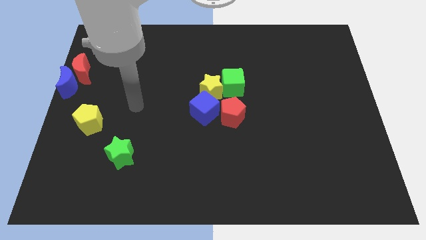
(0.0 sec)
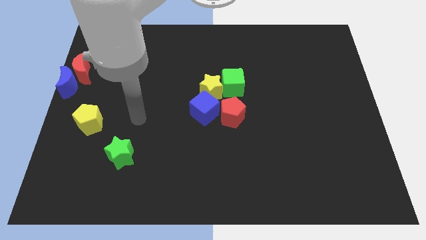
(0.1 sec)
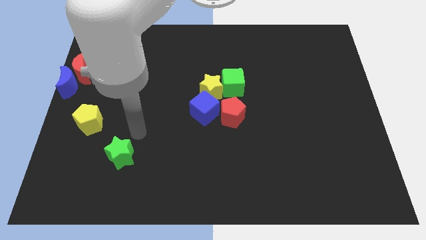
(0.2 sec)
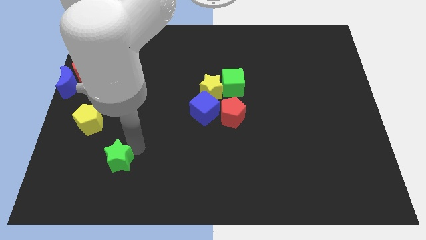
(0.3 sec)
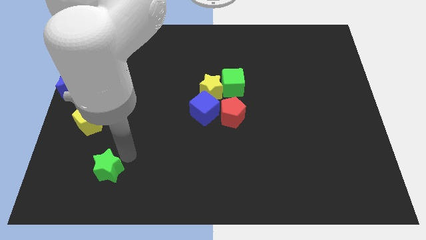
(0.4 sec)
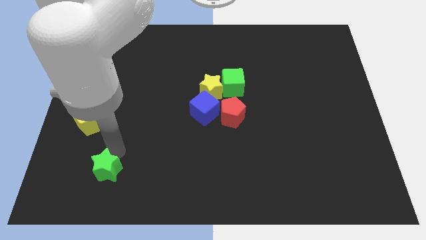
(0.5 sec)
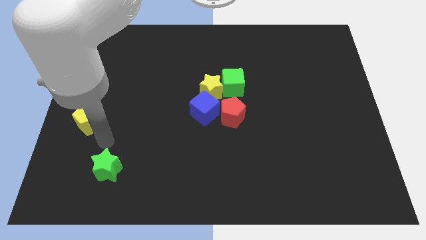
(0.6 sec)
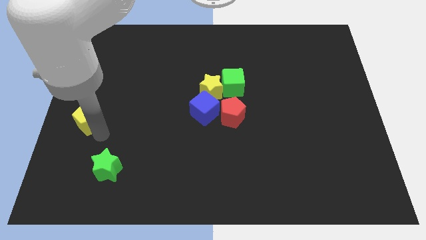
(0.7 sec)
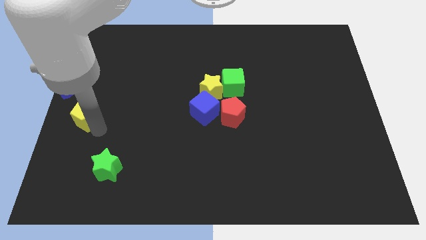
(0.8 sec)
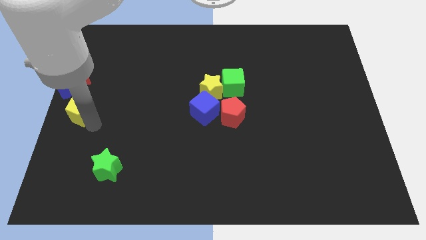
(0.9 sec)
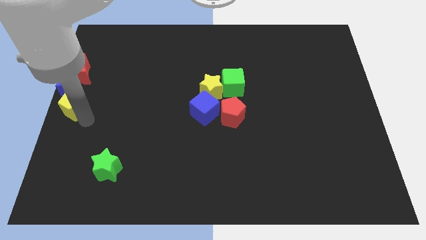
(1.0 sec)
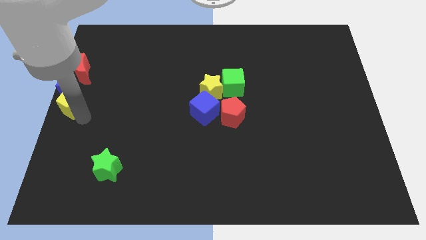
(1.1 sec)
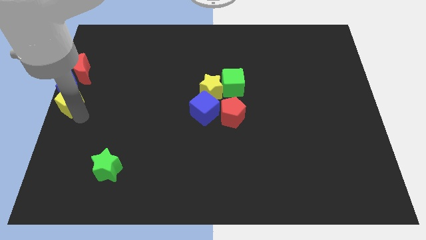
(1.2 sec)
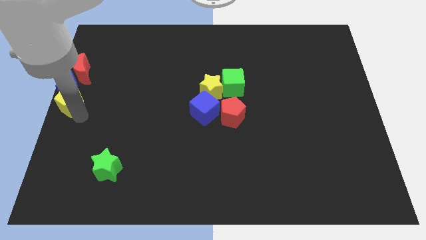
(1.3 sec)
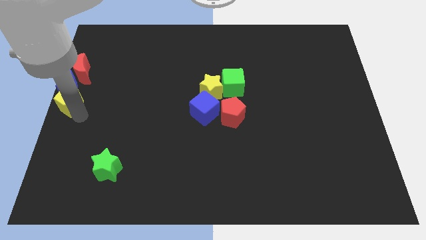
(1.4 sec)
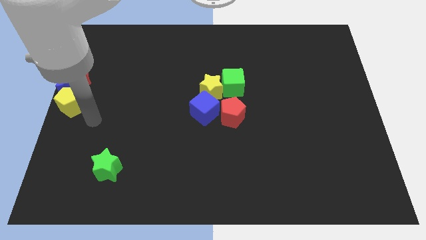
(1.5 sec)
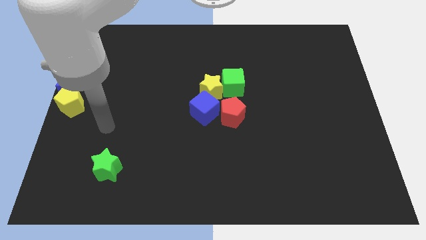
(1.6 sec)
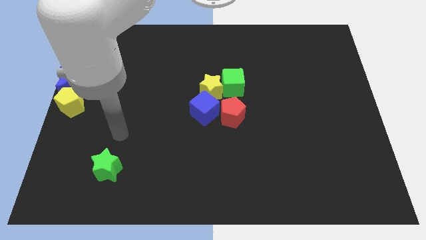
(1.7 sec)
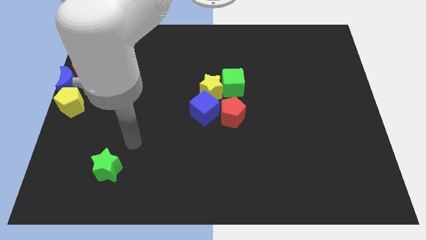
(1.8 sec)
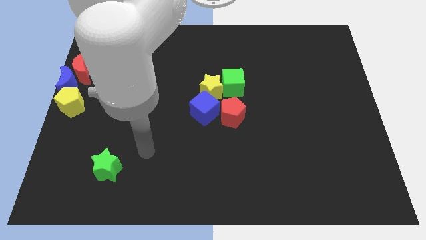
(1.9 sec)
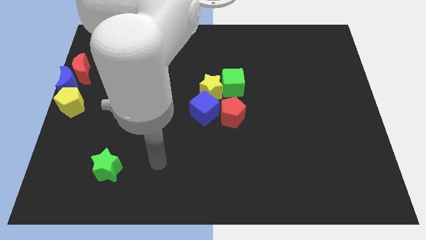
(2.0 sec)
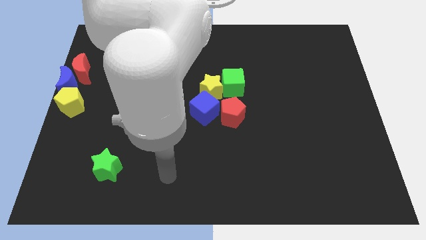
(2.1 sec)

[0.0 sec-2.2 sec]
move the yellow pentagon to the center left of the board

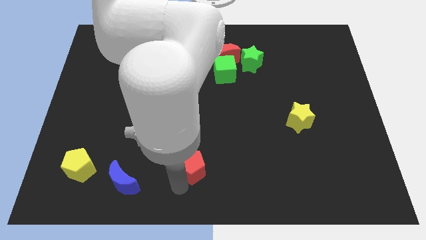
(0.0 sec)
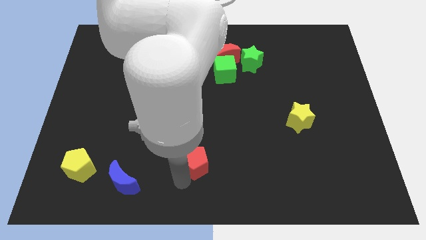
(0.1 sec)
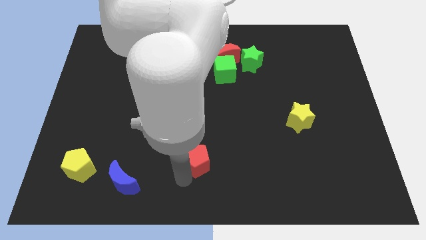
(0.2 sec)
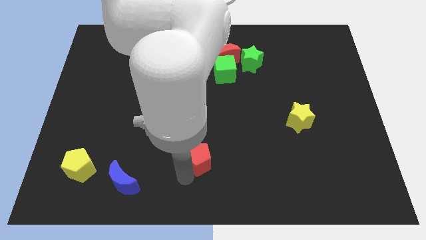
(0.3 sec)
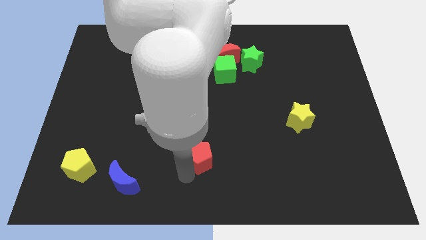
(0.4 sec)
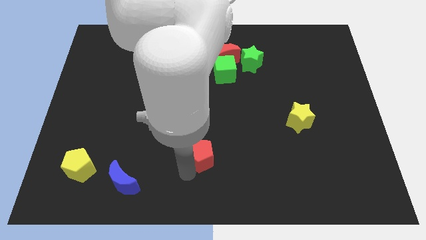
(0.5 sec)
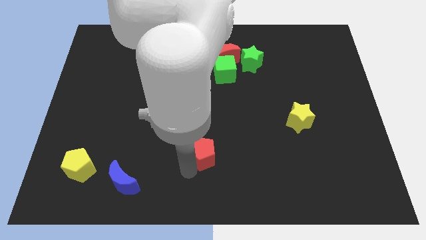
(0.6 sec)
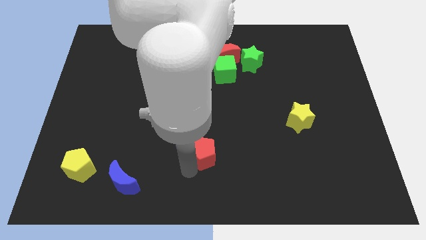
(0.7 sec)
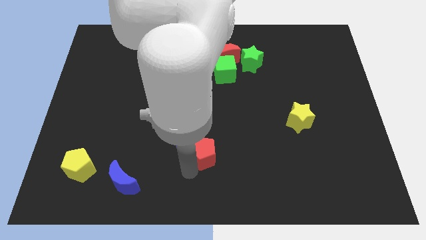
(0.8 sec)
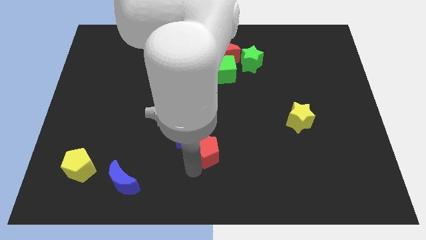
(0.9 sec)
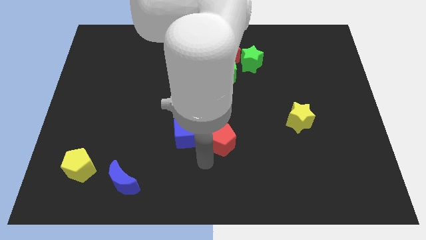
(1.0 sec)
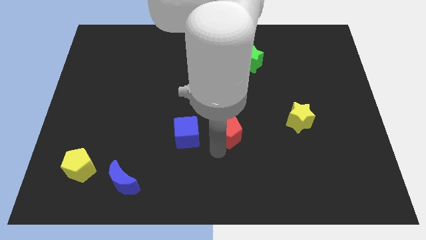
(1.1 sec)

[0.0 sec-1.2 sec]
move the red pentagon right to the blue cube

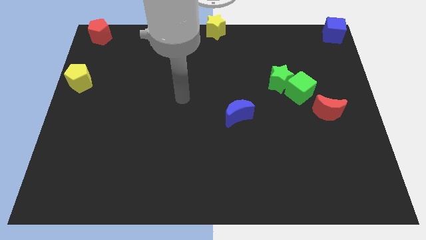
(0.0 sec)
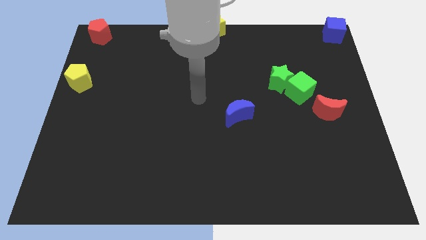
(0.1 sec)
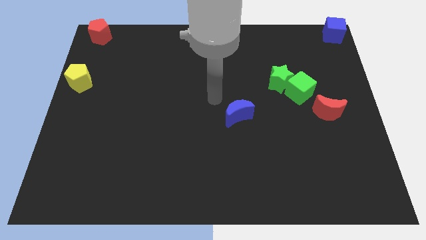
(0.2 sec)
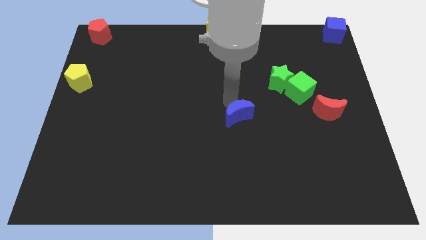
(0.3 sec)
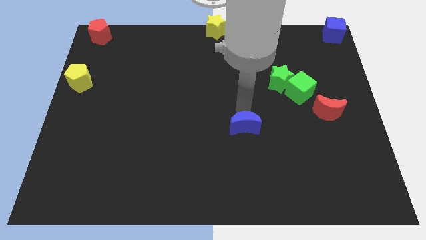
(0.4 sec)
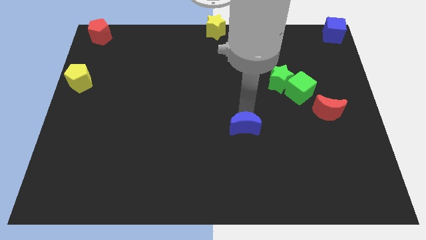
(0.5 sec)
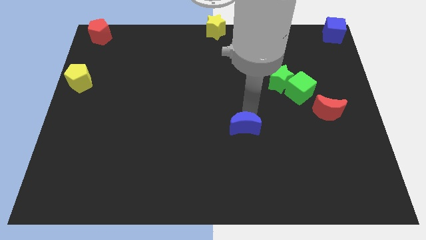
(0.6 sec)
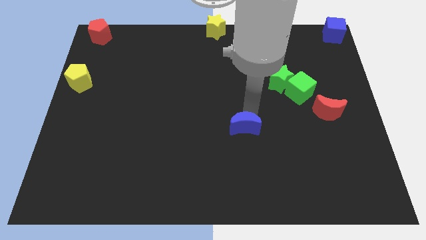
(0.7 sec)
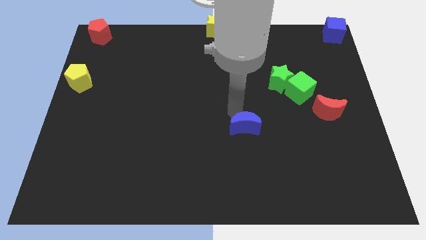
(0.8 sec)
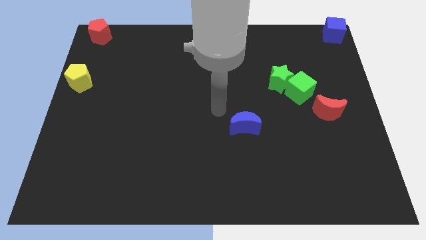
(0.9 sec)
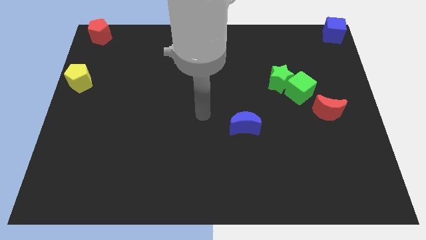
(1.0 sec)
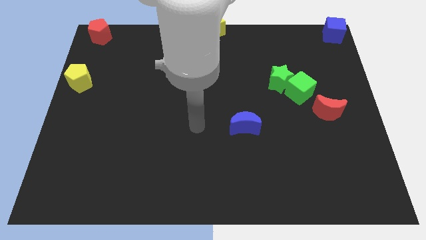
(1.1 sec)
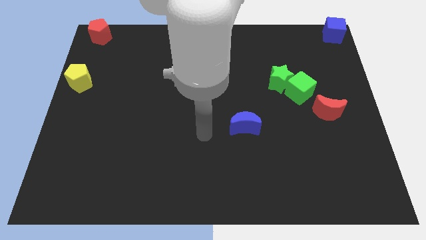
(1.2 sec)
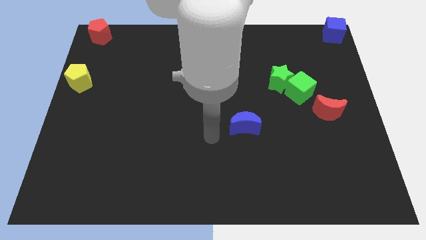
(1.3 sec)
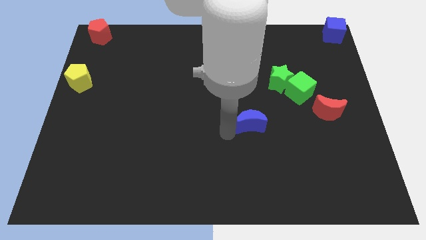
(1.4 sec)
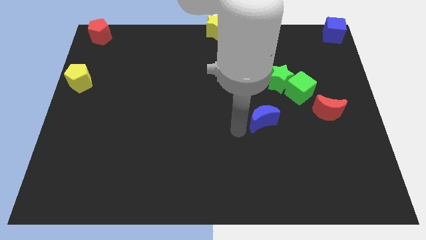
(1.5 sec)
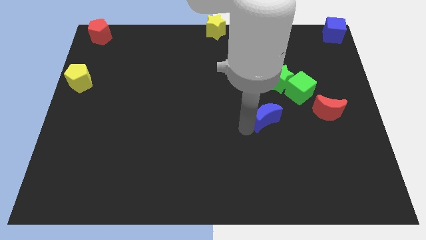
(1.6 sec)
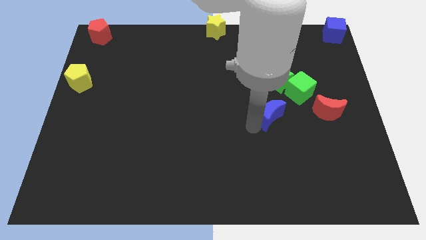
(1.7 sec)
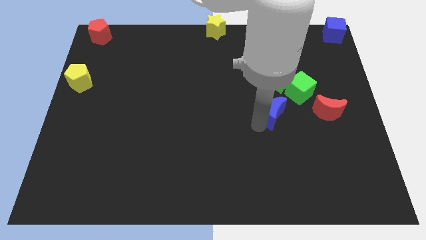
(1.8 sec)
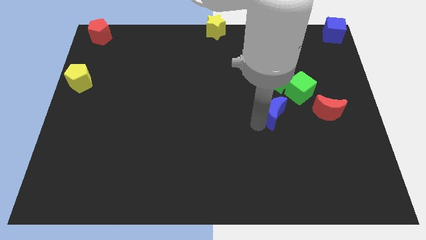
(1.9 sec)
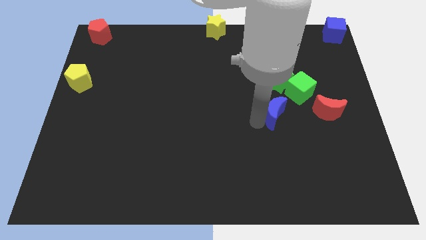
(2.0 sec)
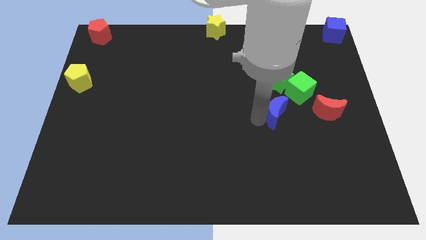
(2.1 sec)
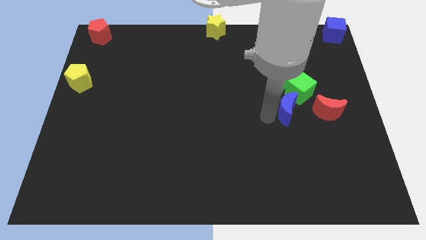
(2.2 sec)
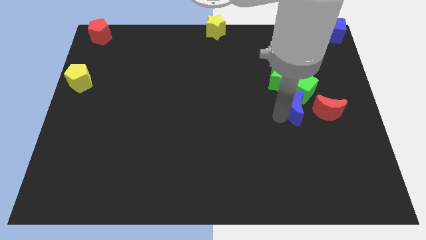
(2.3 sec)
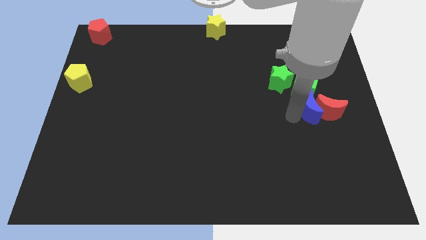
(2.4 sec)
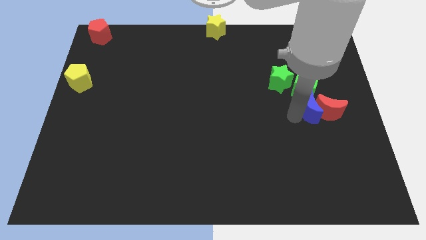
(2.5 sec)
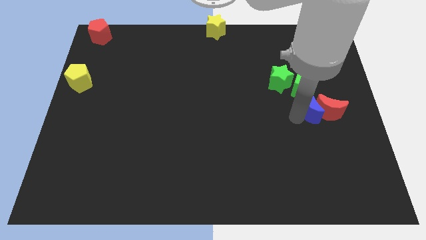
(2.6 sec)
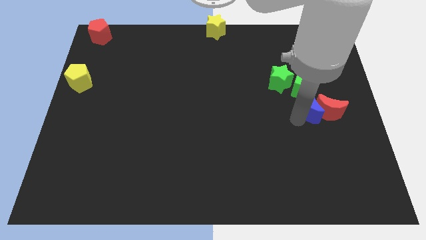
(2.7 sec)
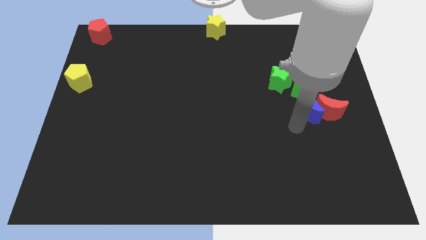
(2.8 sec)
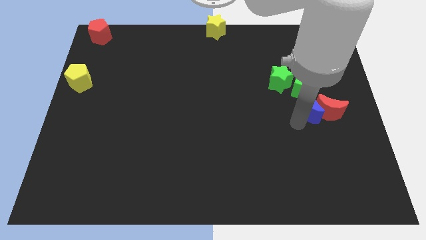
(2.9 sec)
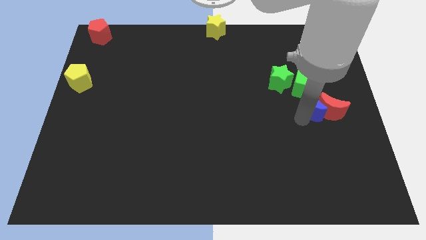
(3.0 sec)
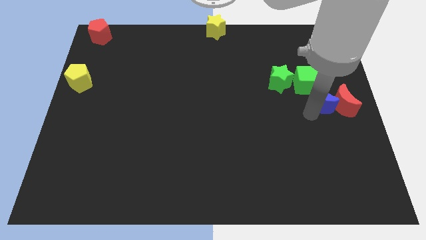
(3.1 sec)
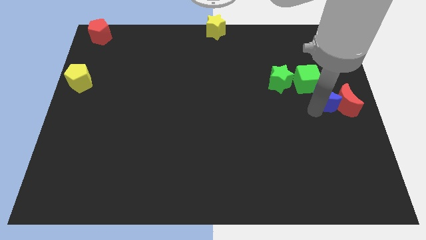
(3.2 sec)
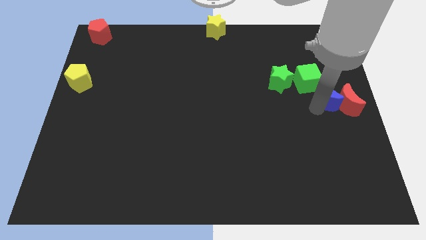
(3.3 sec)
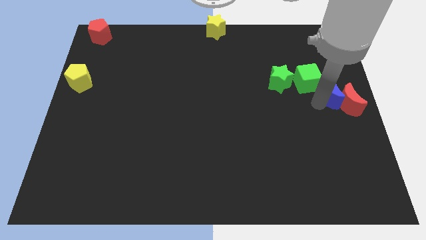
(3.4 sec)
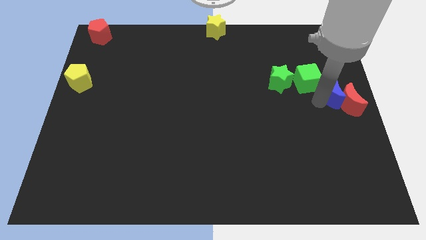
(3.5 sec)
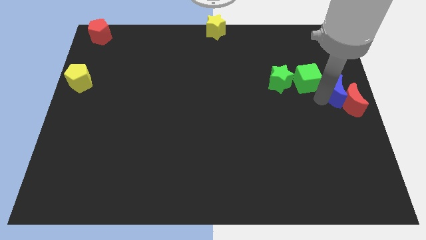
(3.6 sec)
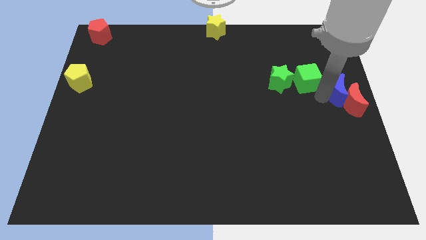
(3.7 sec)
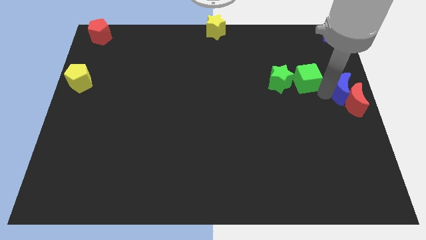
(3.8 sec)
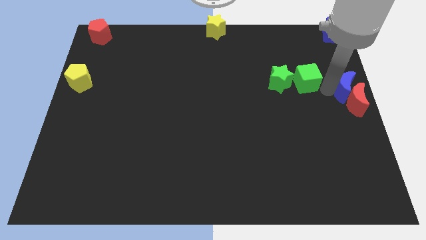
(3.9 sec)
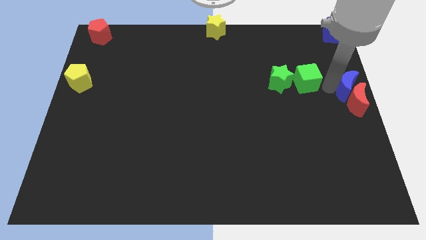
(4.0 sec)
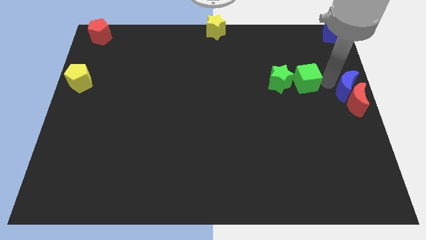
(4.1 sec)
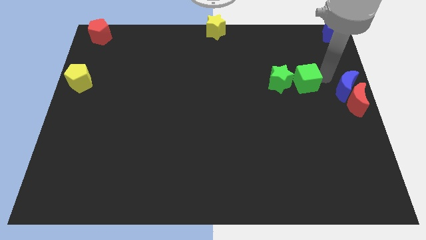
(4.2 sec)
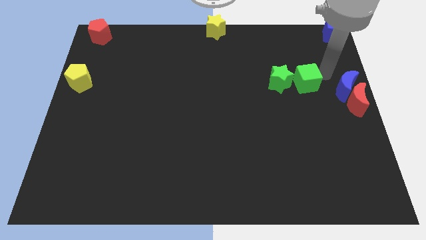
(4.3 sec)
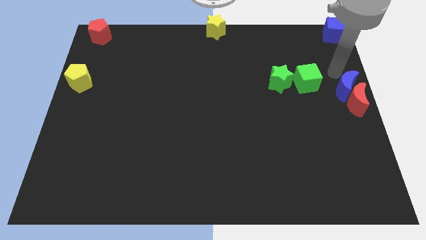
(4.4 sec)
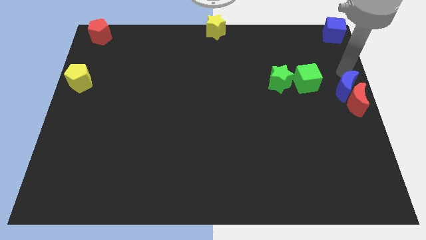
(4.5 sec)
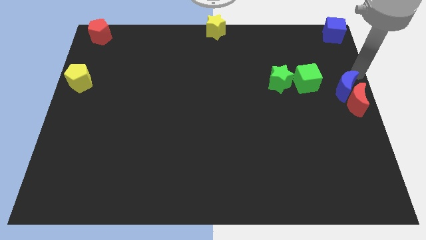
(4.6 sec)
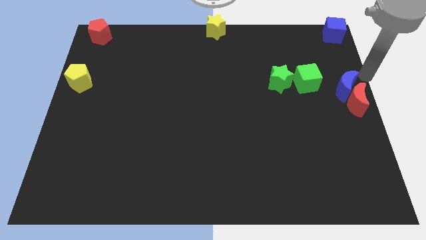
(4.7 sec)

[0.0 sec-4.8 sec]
push the blue moon into red moon

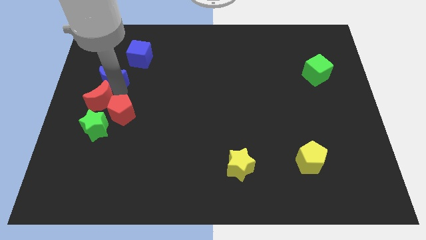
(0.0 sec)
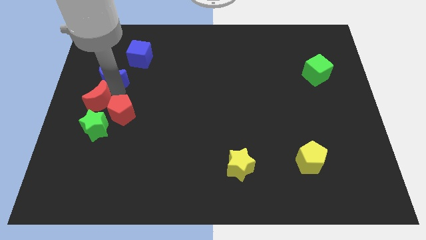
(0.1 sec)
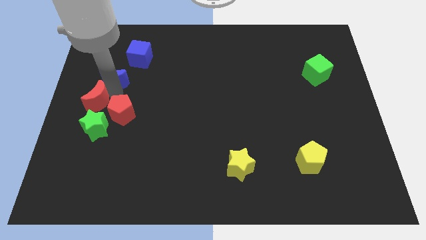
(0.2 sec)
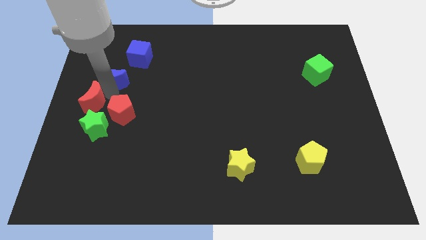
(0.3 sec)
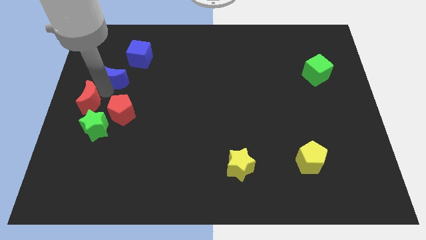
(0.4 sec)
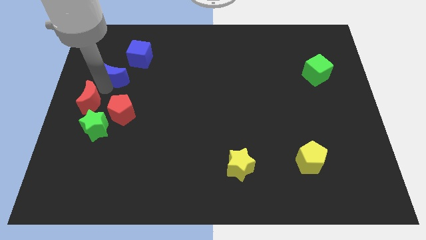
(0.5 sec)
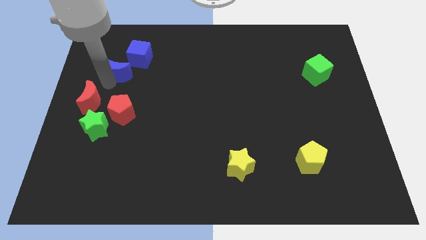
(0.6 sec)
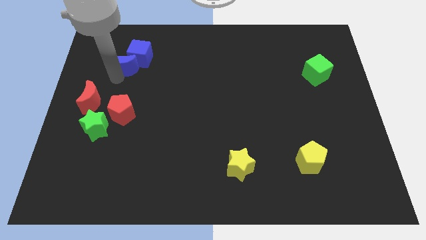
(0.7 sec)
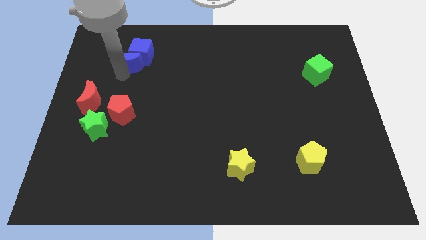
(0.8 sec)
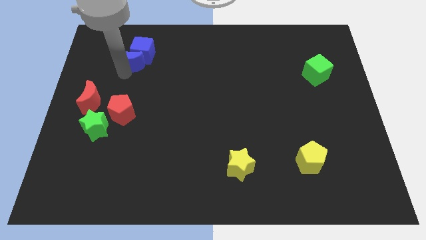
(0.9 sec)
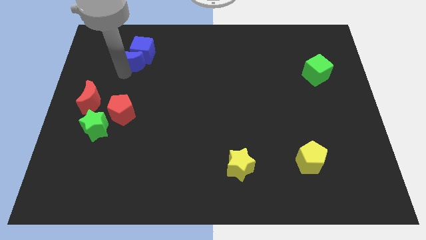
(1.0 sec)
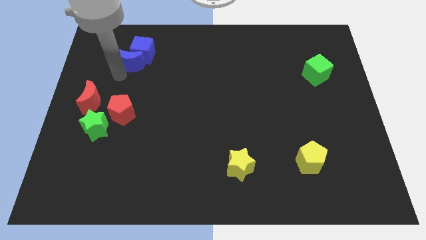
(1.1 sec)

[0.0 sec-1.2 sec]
push the blue crescent into the blue cube
